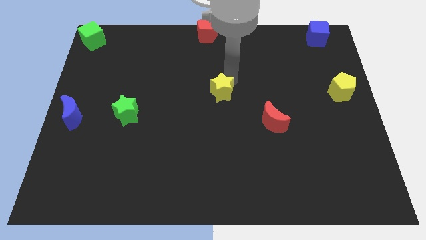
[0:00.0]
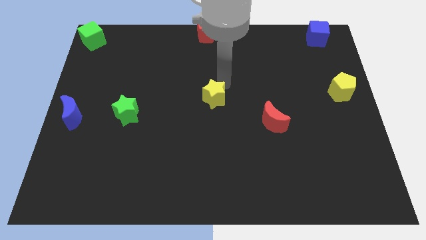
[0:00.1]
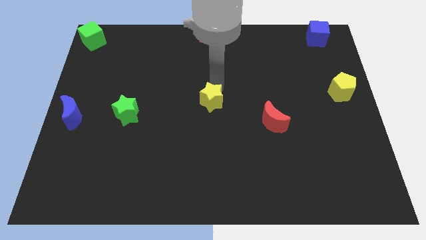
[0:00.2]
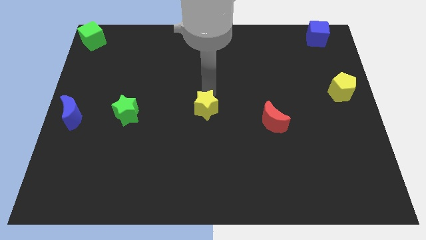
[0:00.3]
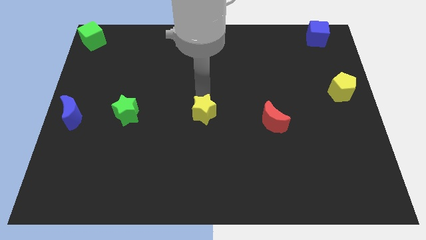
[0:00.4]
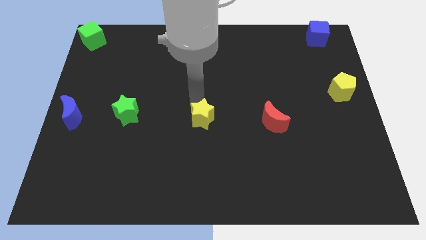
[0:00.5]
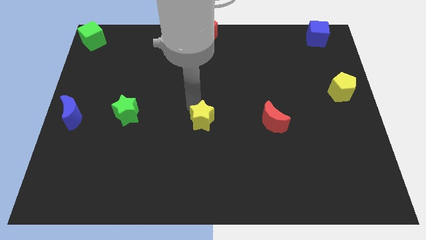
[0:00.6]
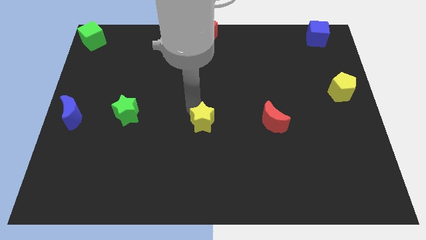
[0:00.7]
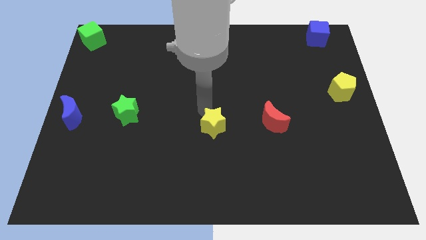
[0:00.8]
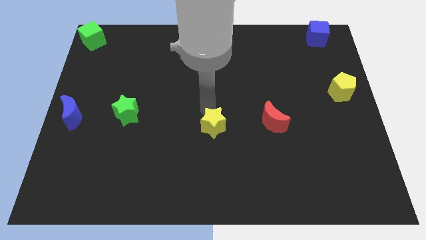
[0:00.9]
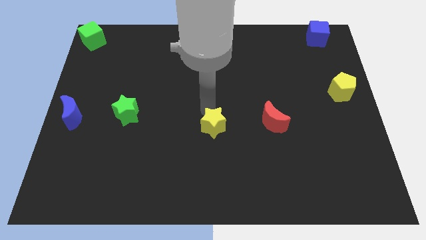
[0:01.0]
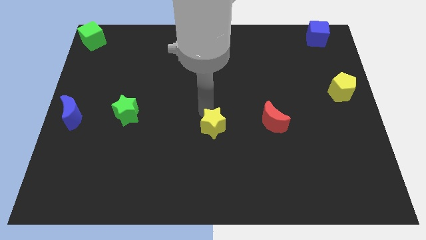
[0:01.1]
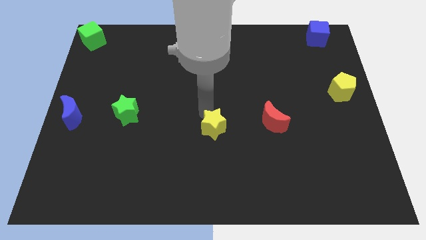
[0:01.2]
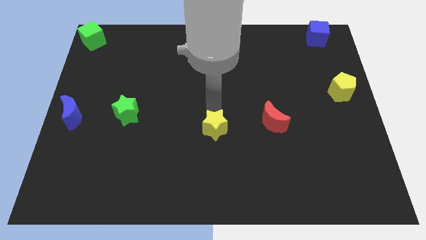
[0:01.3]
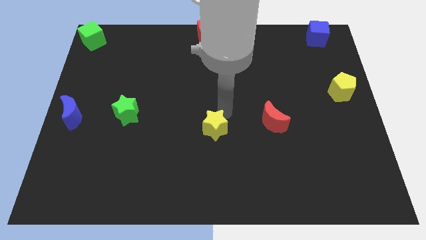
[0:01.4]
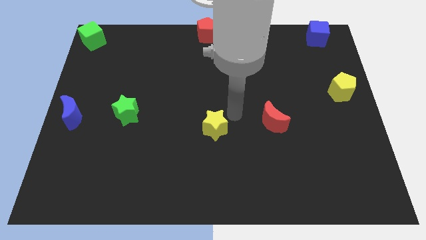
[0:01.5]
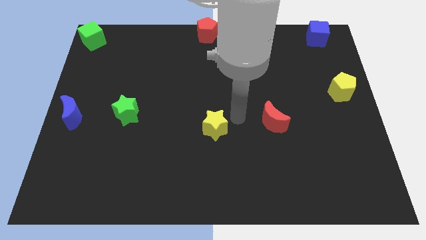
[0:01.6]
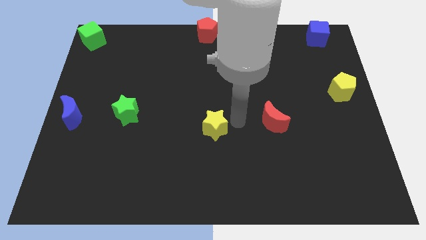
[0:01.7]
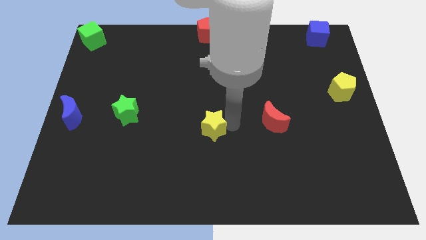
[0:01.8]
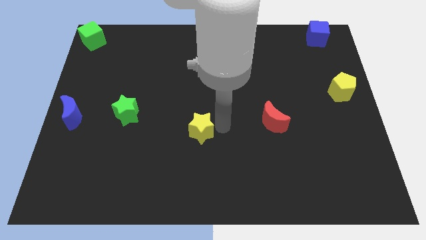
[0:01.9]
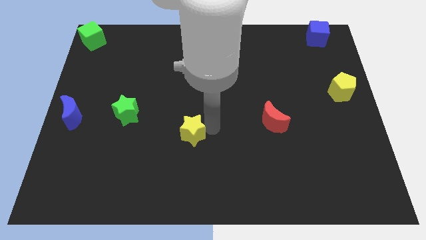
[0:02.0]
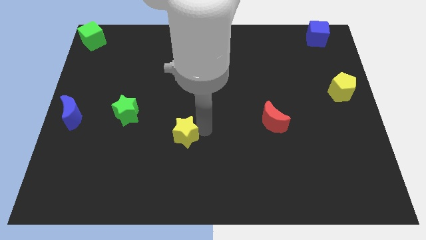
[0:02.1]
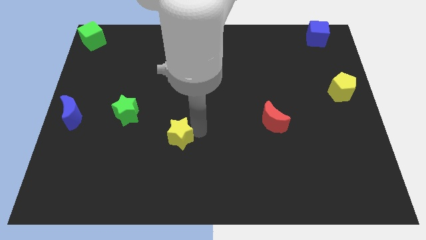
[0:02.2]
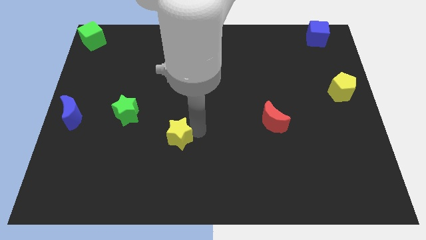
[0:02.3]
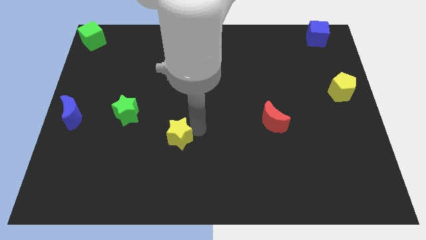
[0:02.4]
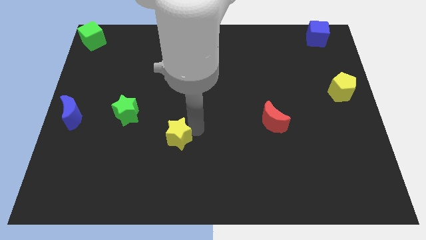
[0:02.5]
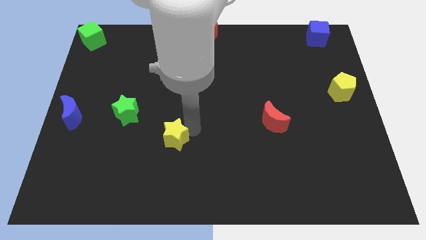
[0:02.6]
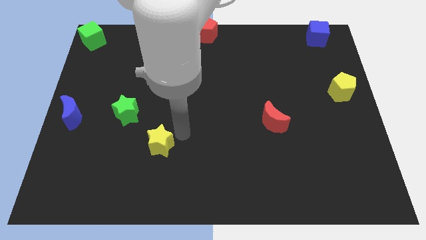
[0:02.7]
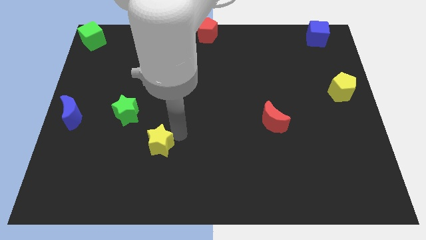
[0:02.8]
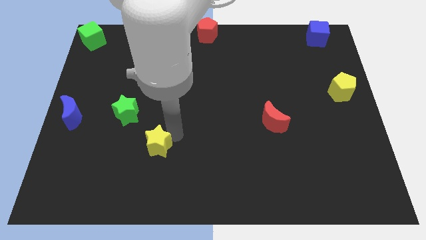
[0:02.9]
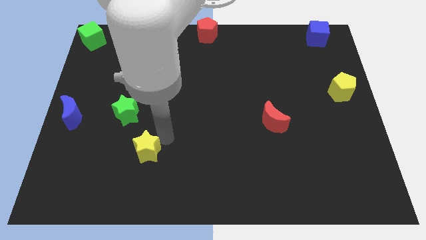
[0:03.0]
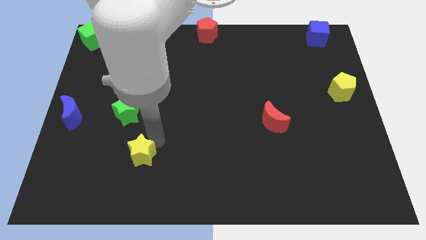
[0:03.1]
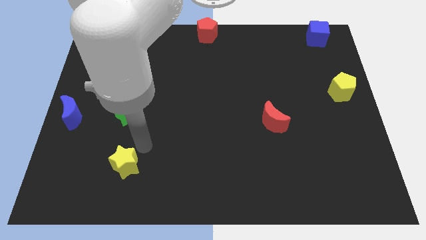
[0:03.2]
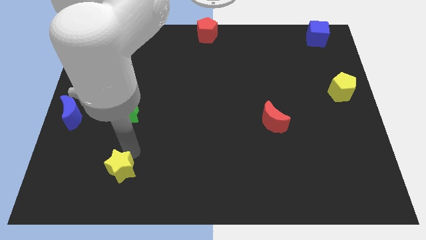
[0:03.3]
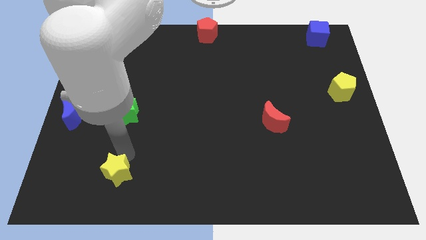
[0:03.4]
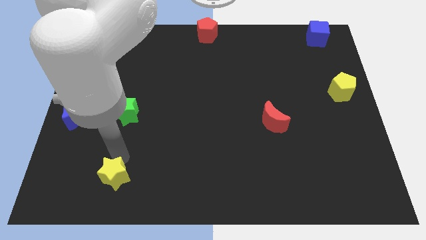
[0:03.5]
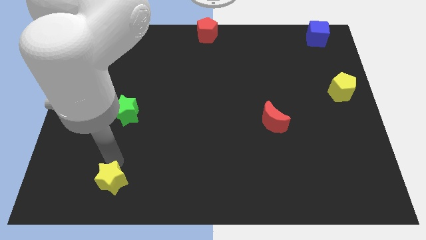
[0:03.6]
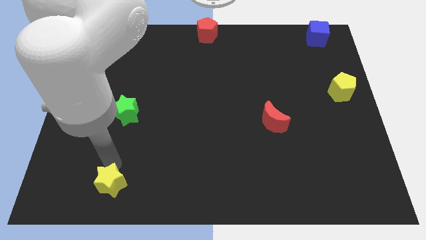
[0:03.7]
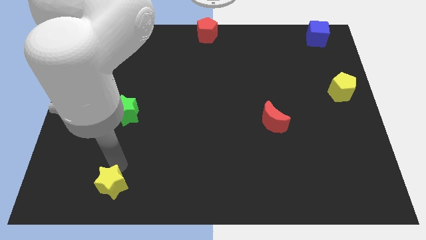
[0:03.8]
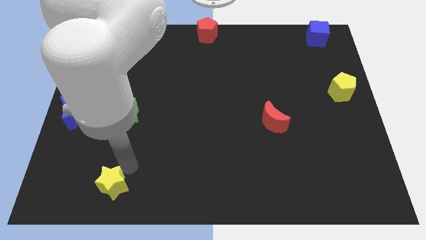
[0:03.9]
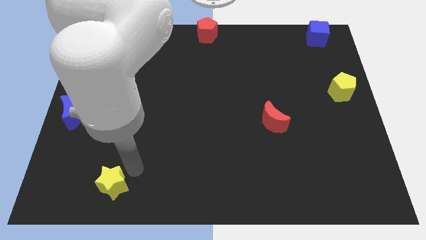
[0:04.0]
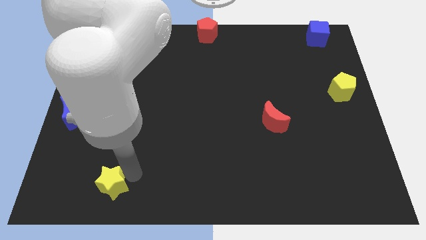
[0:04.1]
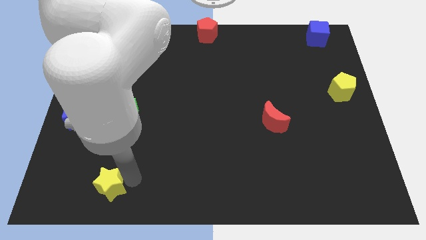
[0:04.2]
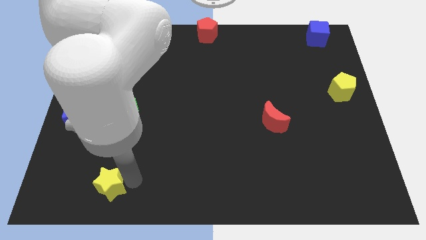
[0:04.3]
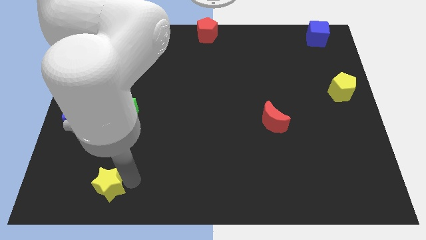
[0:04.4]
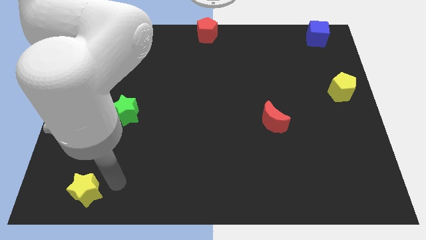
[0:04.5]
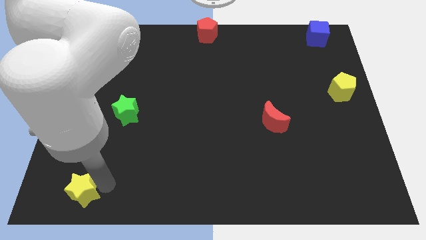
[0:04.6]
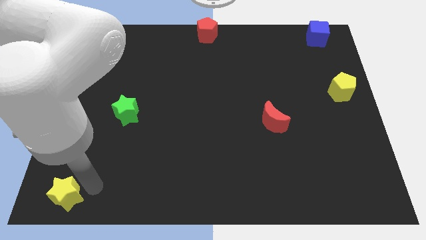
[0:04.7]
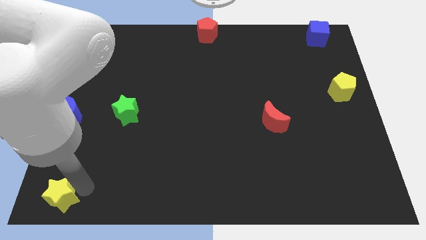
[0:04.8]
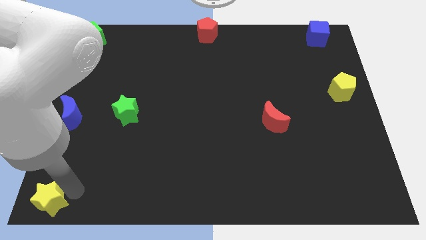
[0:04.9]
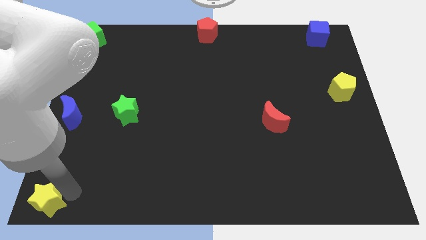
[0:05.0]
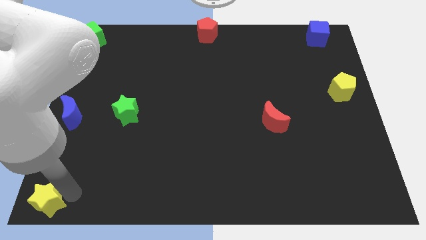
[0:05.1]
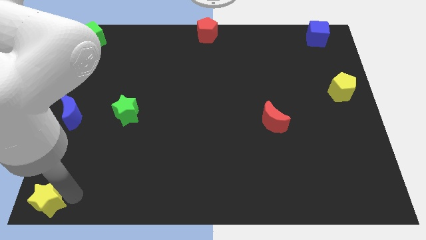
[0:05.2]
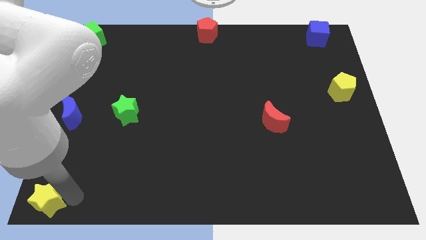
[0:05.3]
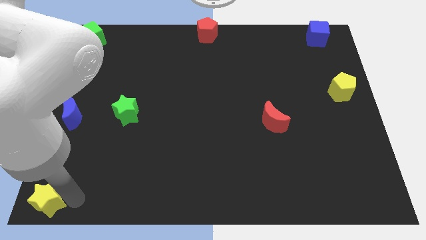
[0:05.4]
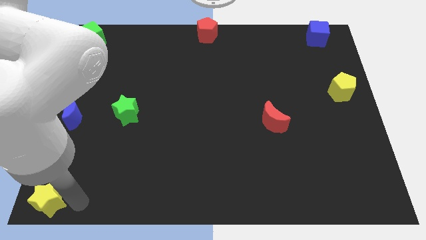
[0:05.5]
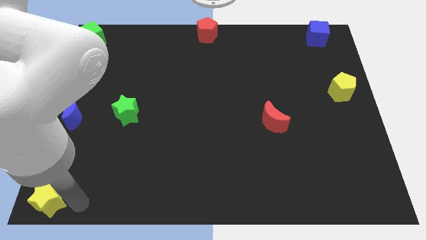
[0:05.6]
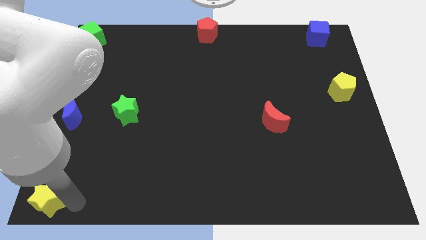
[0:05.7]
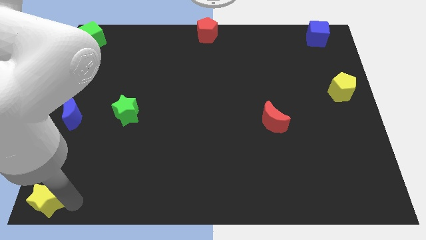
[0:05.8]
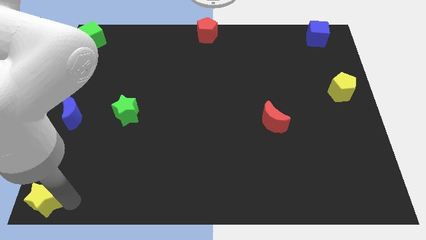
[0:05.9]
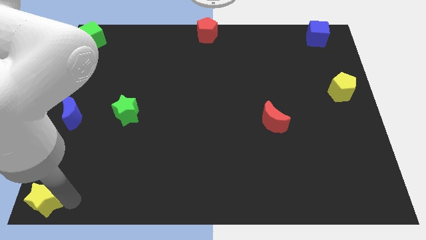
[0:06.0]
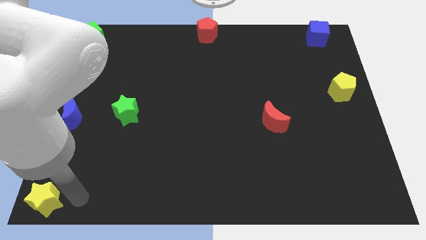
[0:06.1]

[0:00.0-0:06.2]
push the yellow star to the bottom left corner of the board

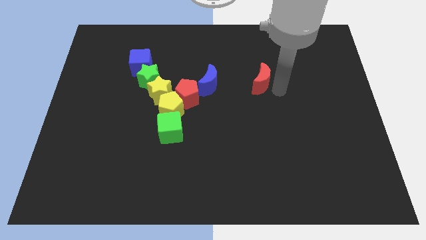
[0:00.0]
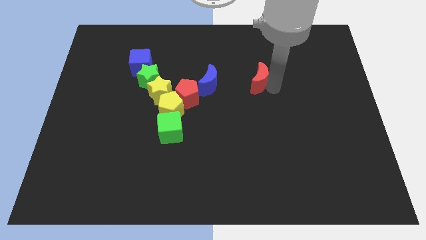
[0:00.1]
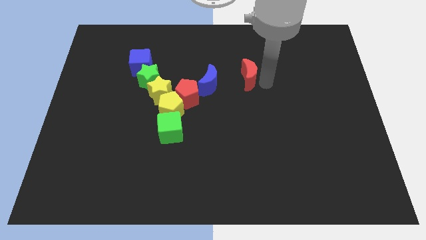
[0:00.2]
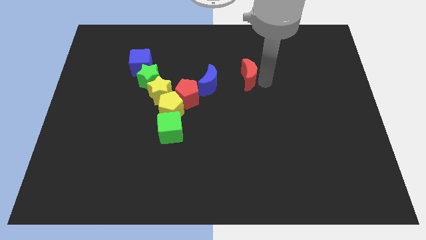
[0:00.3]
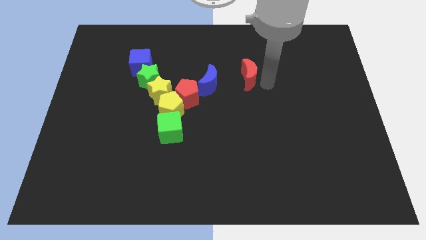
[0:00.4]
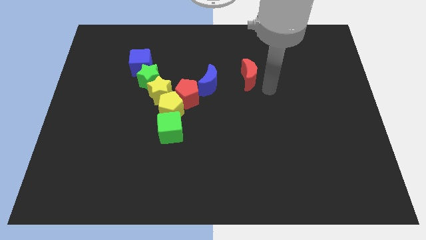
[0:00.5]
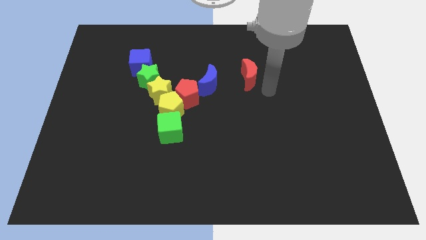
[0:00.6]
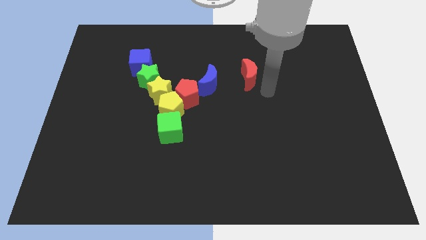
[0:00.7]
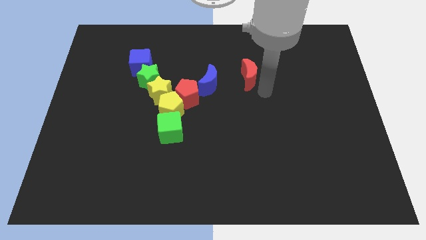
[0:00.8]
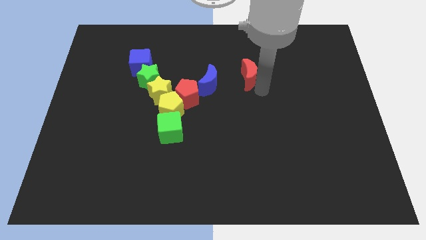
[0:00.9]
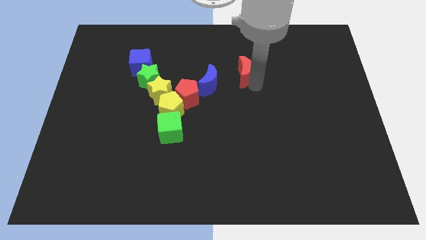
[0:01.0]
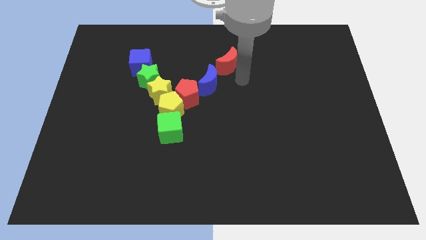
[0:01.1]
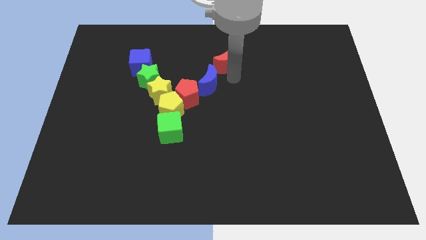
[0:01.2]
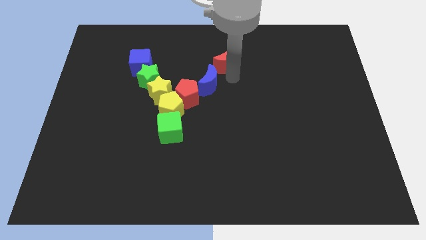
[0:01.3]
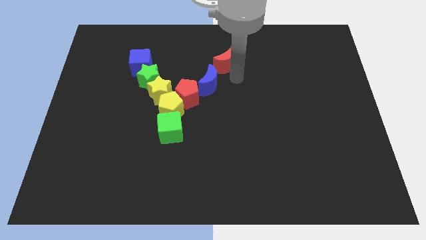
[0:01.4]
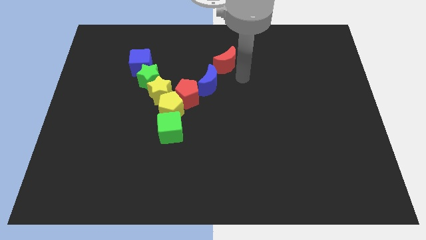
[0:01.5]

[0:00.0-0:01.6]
place the red crescent diagonal above the blue moon

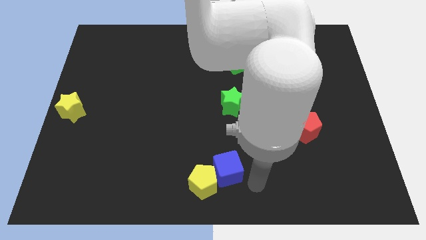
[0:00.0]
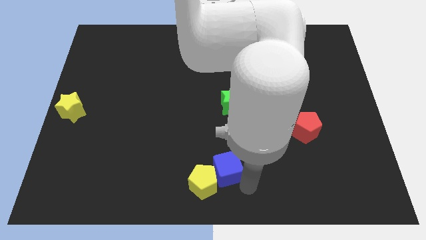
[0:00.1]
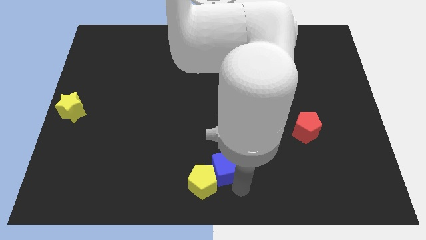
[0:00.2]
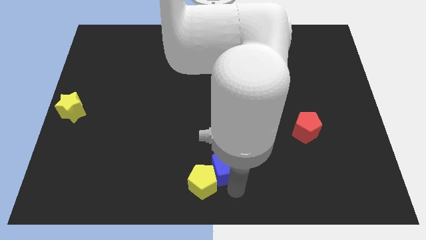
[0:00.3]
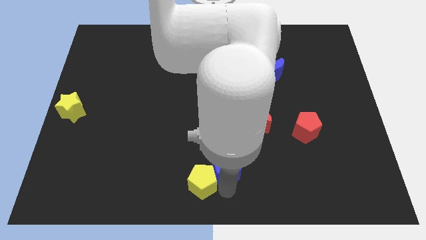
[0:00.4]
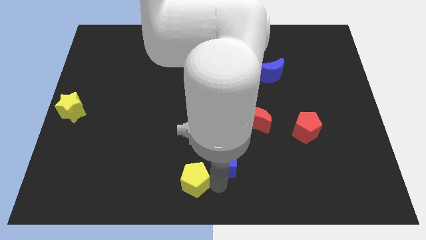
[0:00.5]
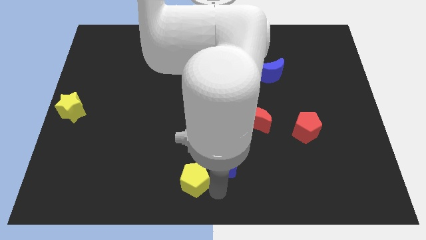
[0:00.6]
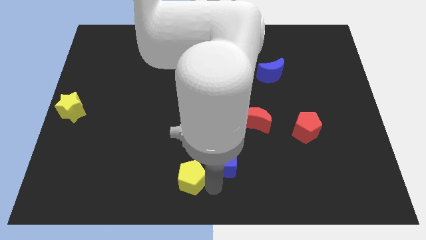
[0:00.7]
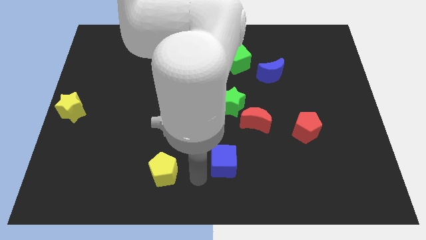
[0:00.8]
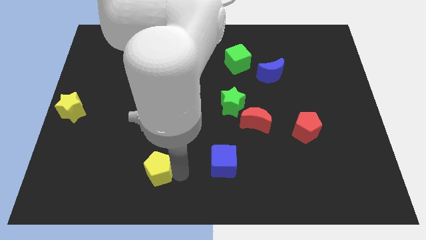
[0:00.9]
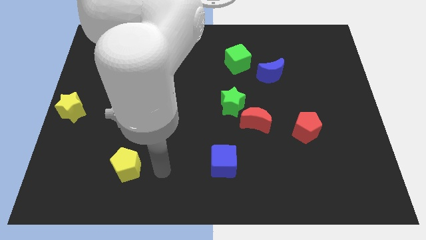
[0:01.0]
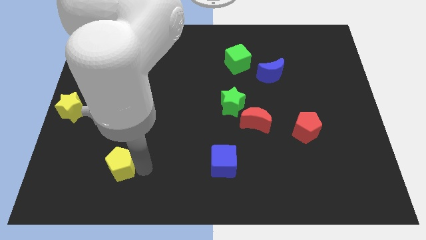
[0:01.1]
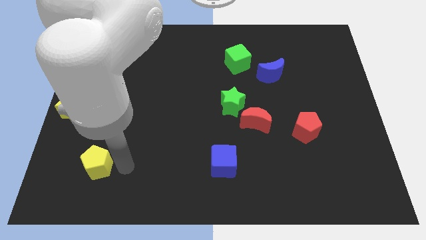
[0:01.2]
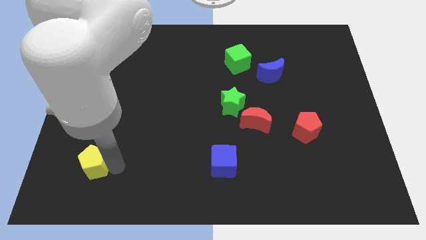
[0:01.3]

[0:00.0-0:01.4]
separate the yellow pentagon from the blue cube
